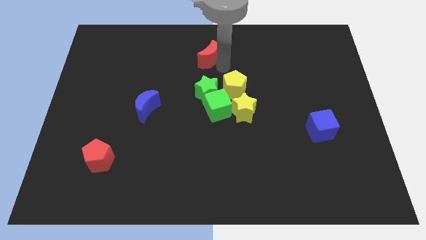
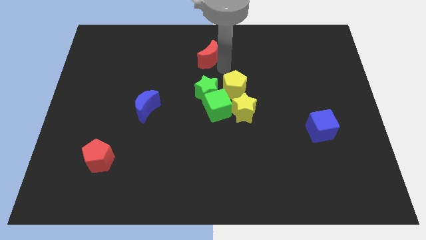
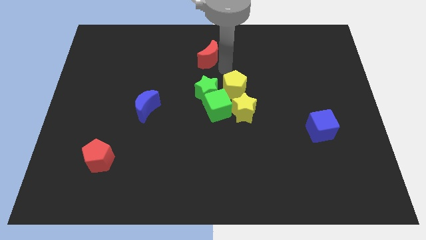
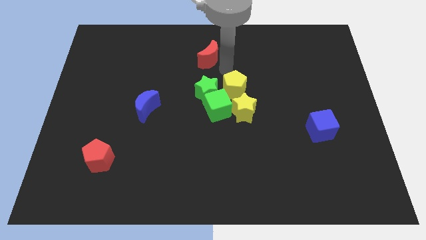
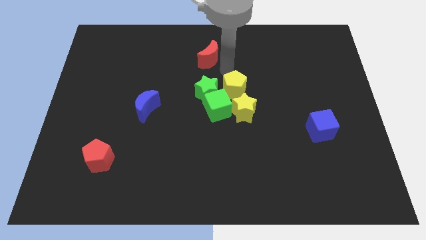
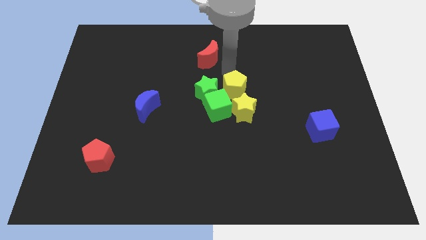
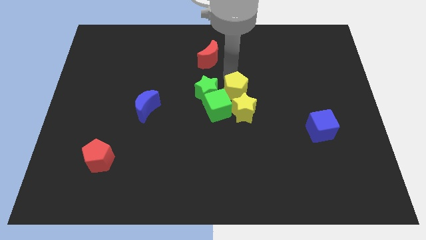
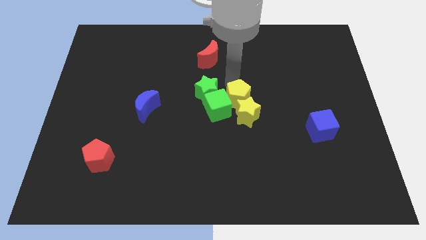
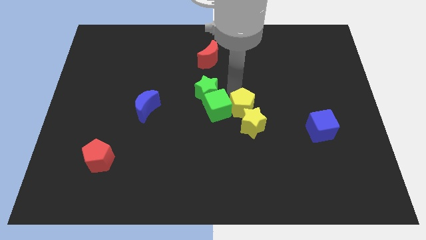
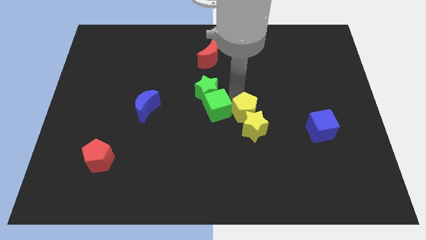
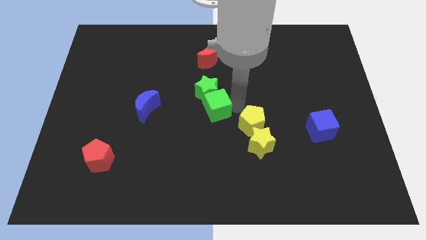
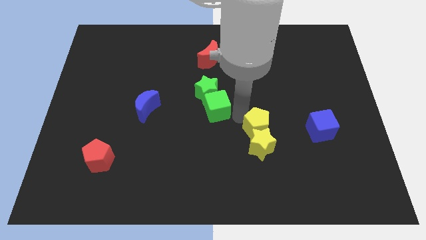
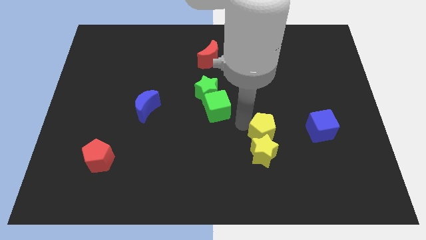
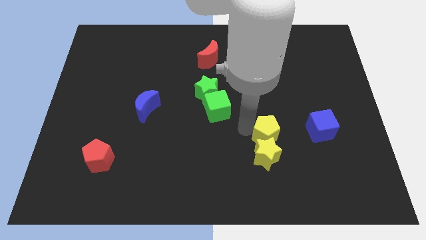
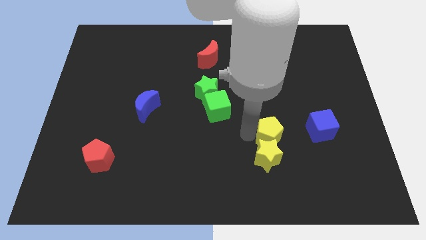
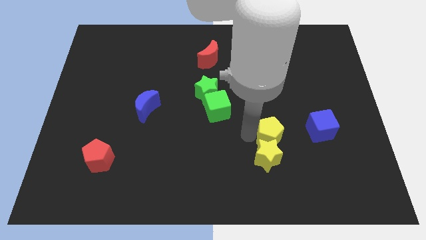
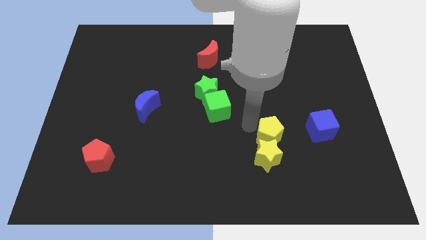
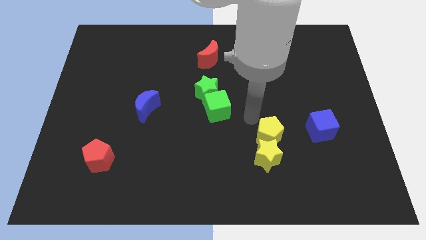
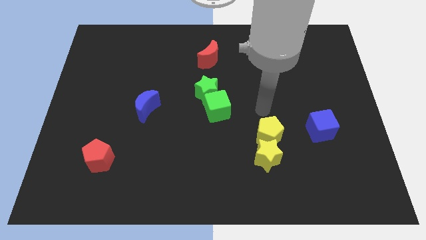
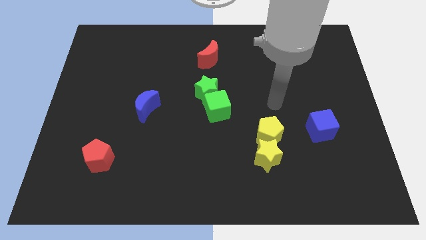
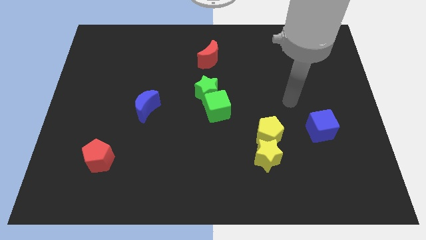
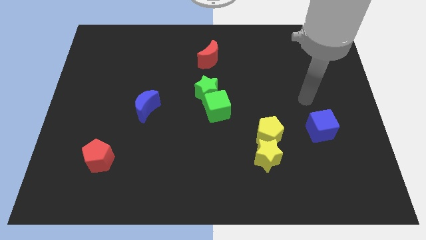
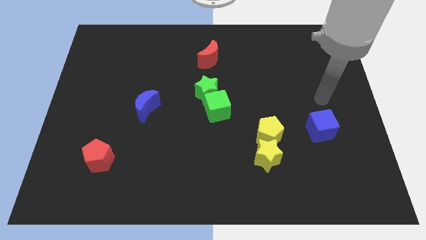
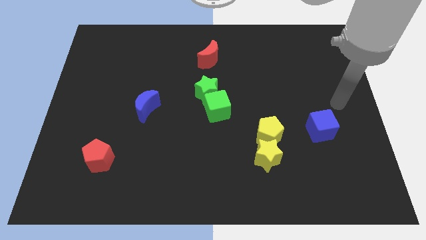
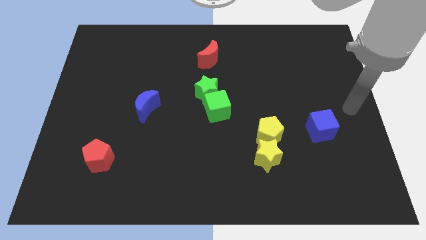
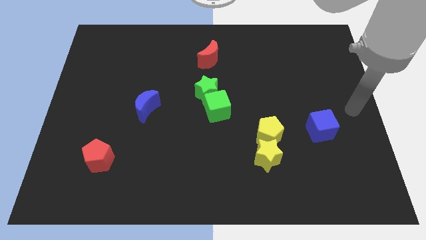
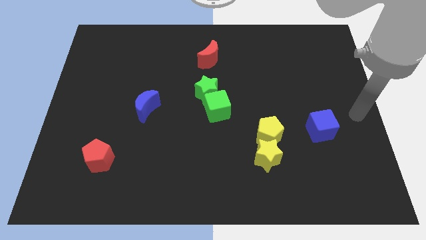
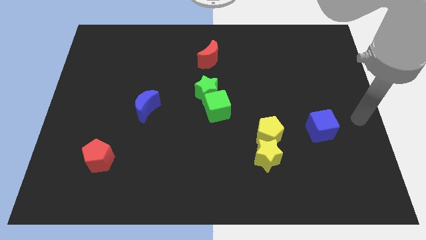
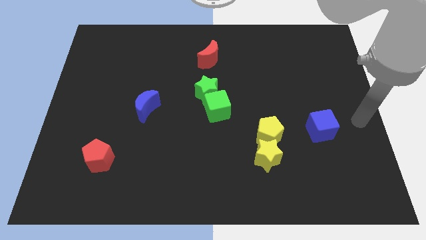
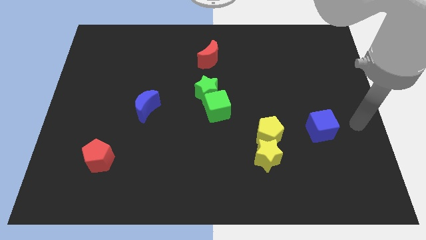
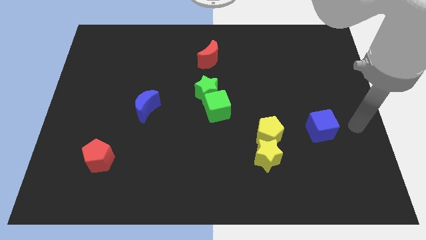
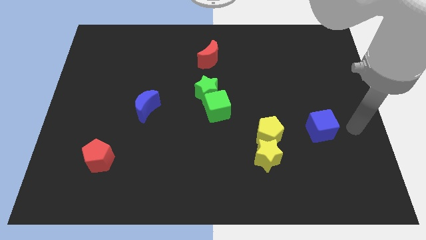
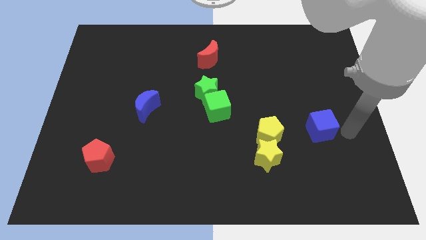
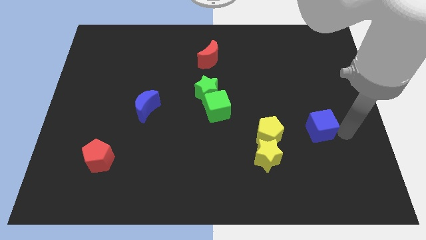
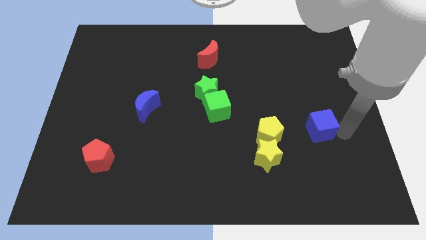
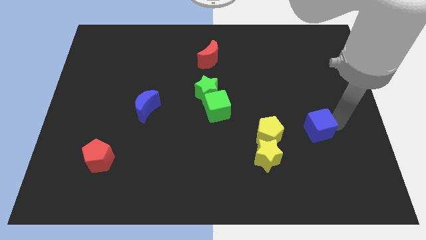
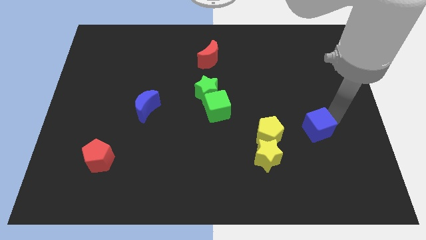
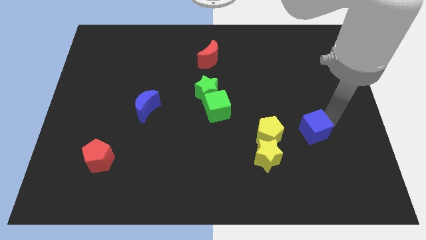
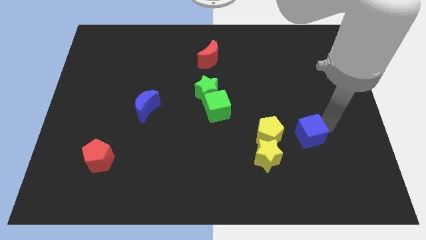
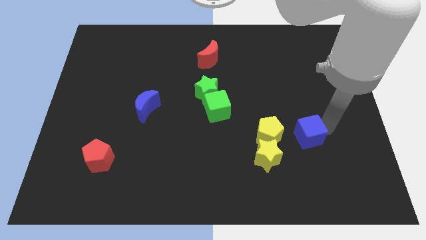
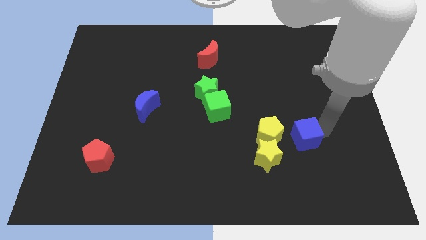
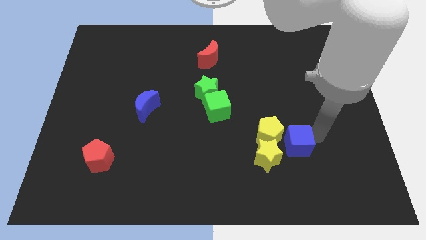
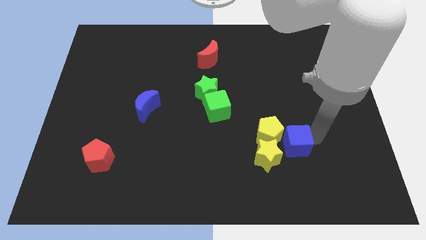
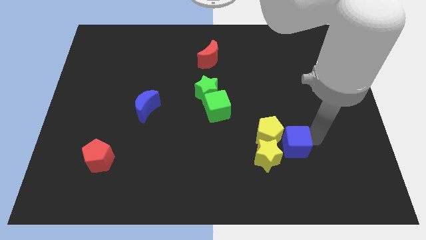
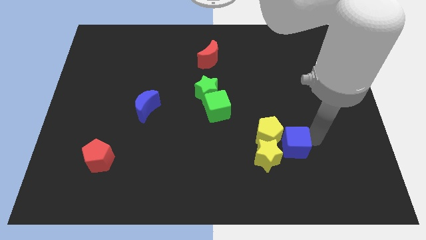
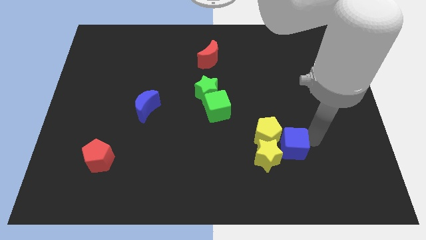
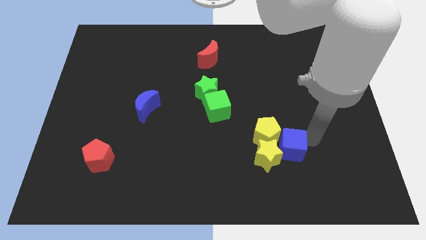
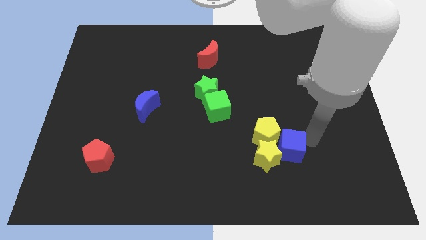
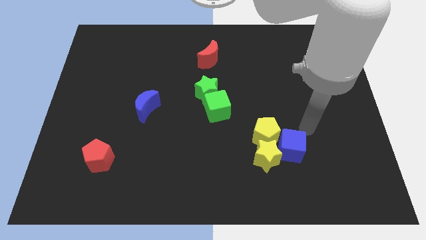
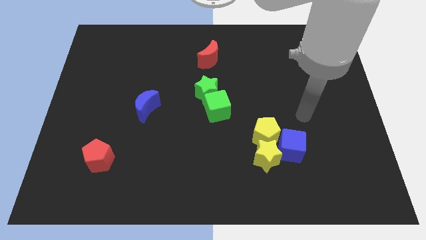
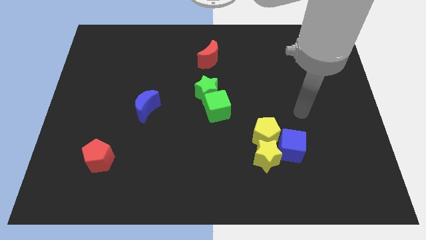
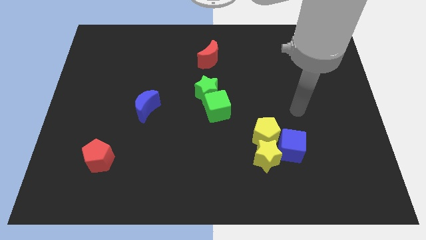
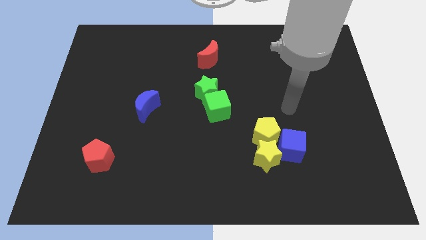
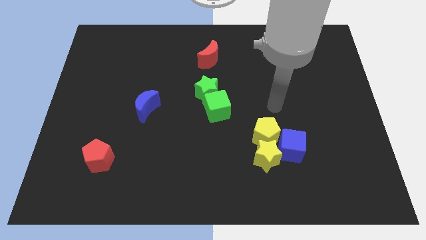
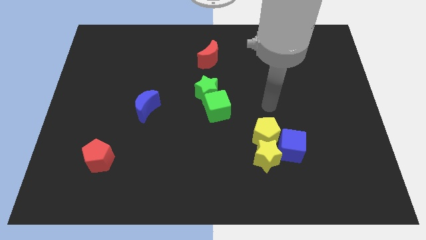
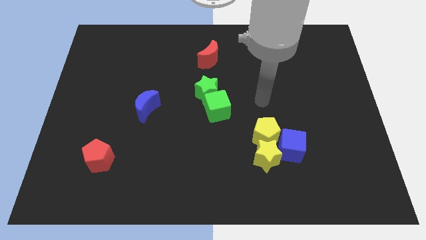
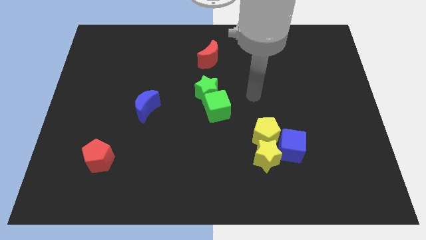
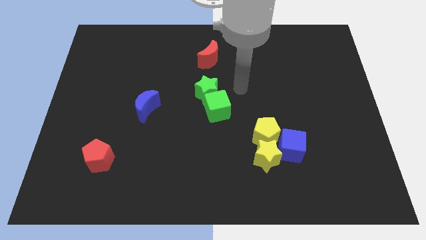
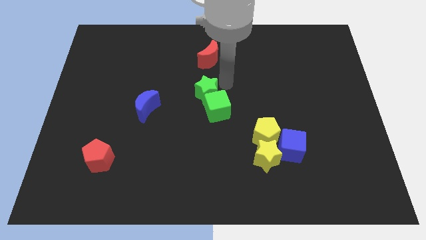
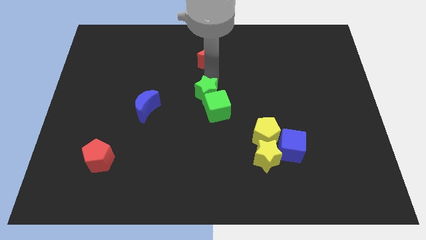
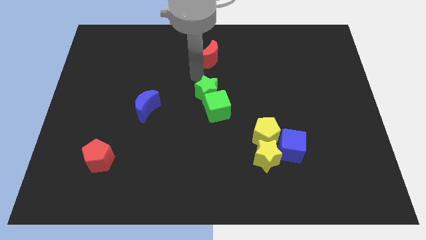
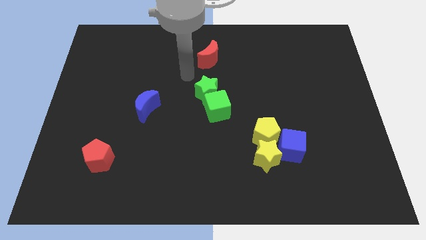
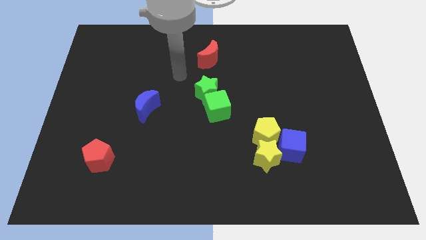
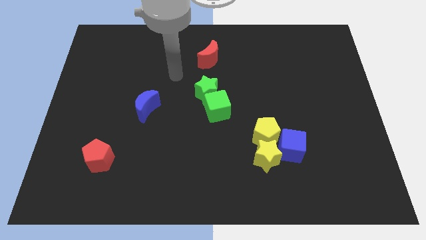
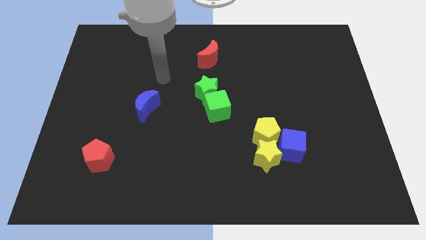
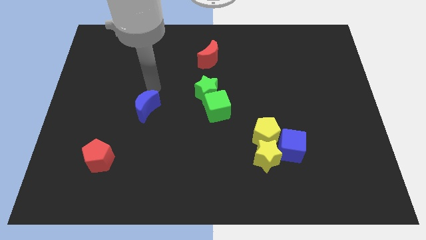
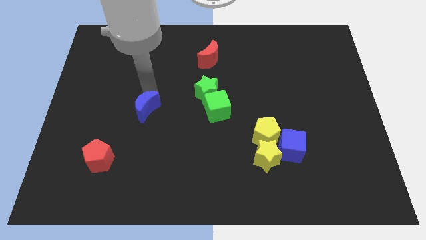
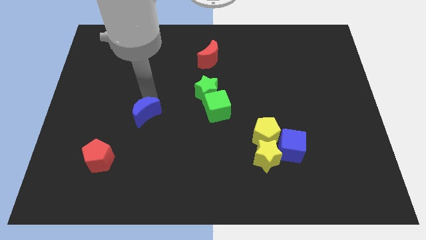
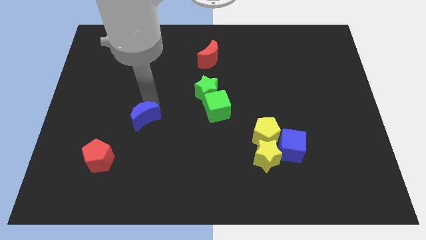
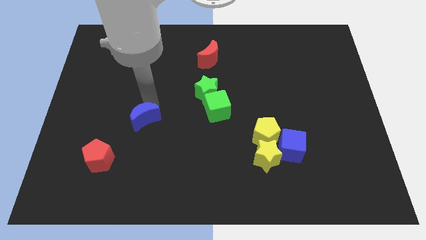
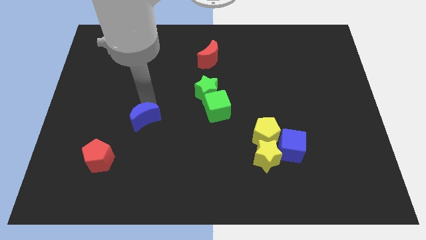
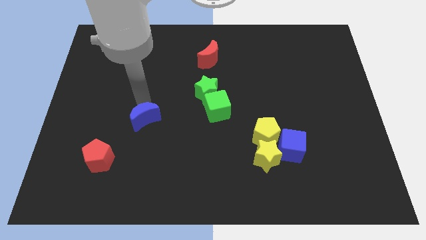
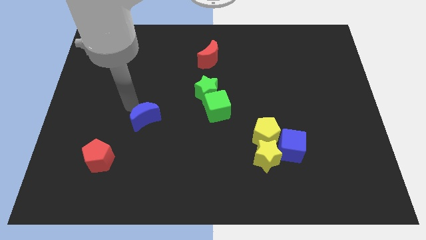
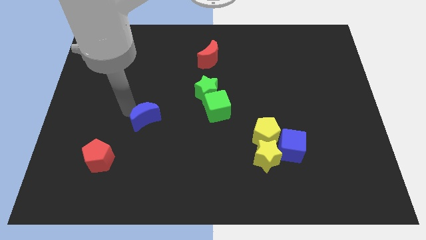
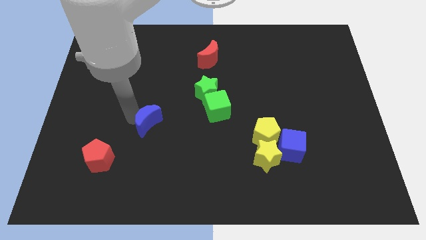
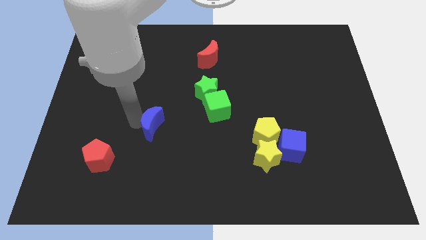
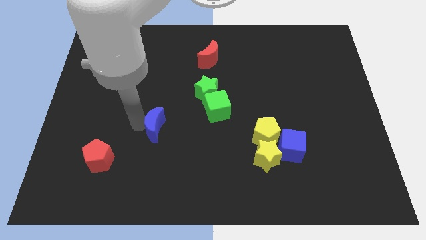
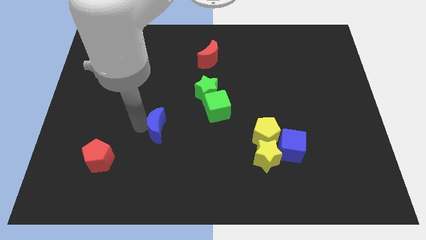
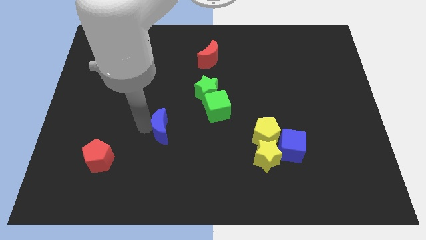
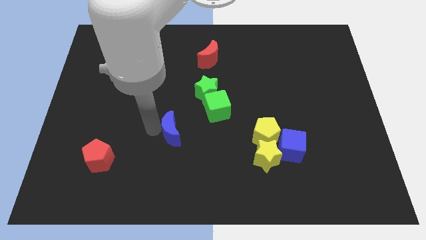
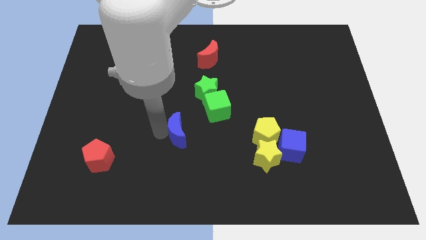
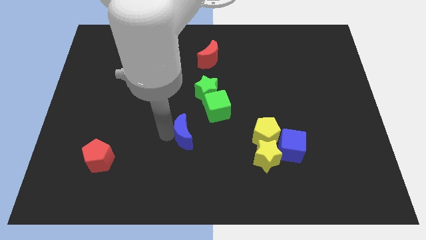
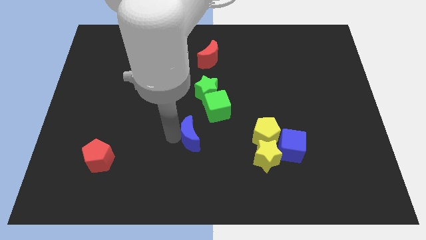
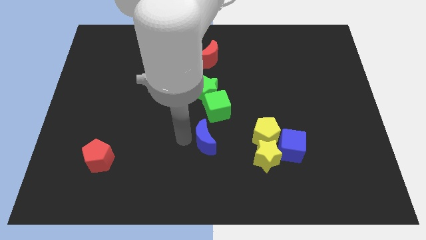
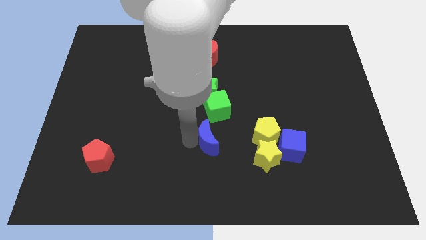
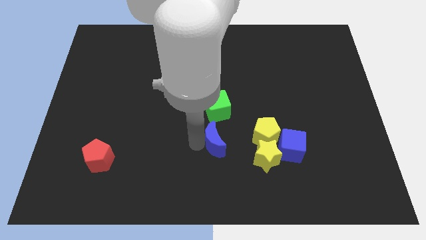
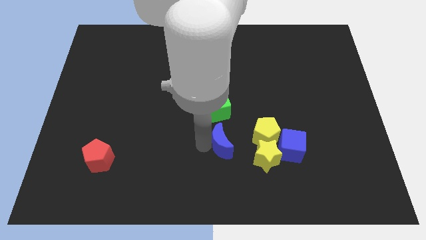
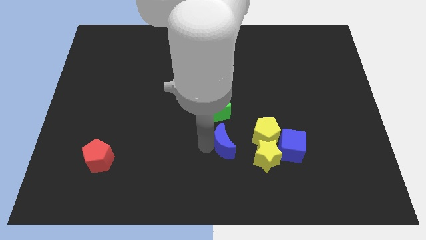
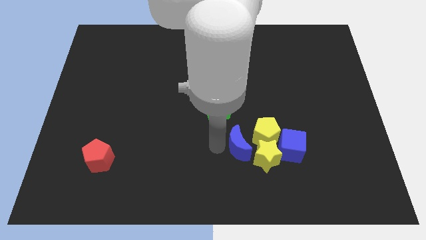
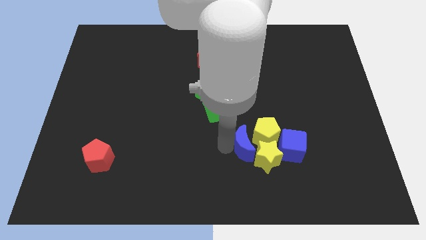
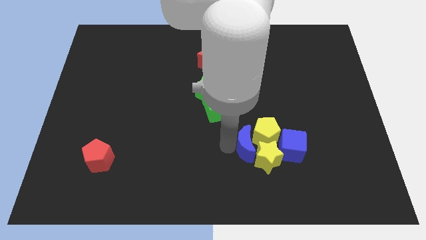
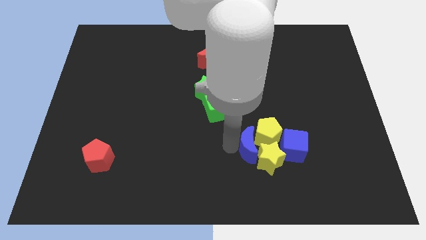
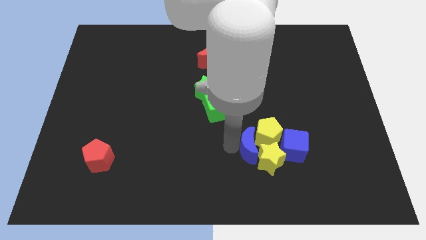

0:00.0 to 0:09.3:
group up the yellow blocks with the blue blocks at the bottom side of the table
